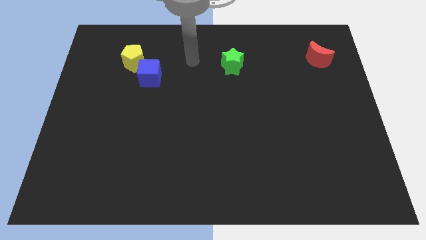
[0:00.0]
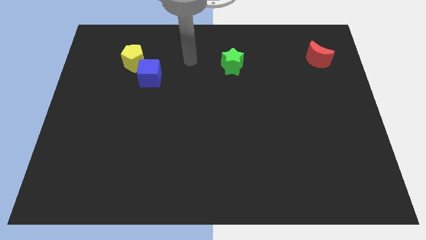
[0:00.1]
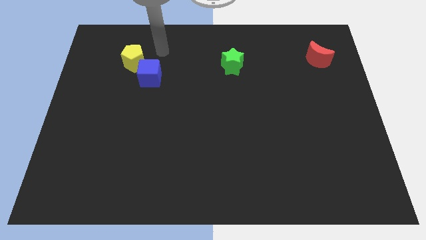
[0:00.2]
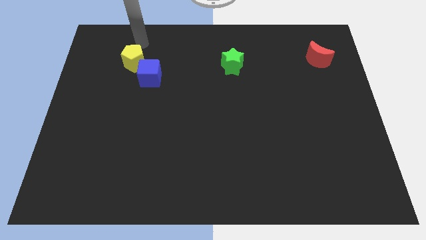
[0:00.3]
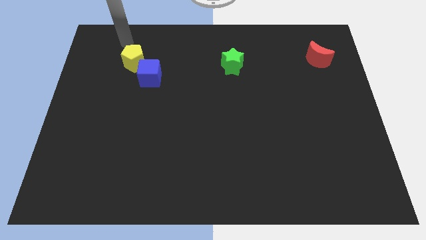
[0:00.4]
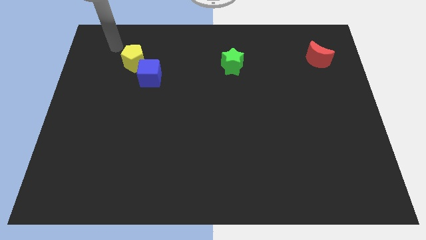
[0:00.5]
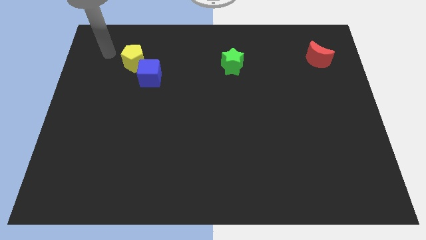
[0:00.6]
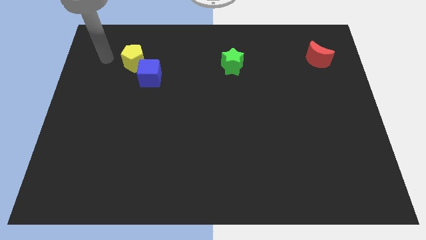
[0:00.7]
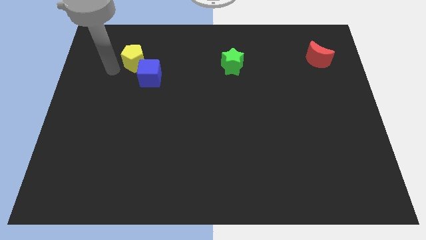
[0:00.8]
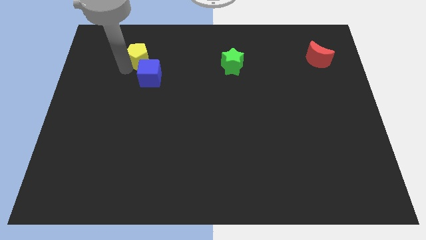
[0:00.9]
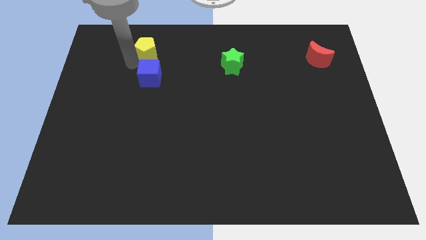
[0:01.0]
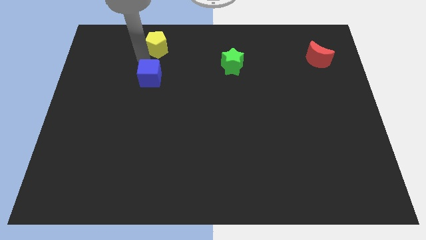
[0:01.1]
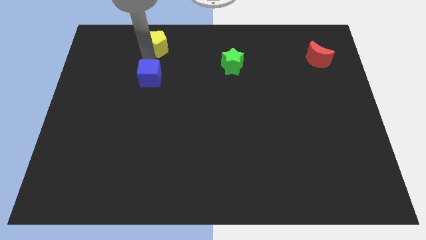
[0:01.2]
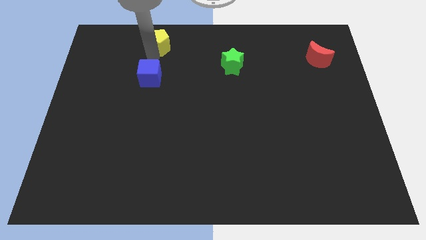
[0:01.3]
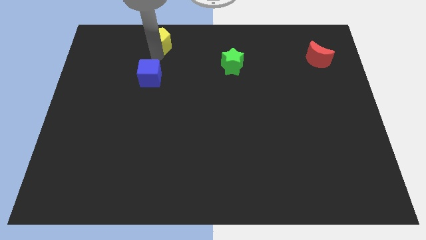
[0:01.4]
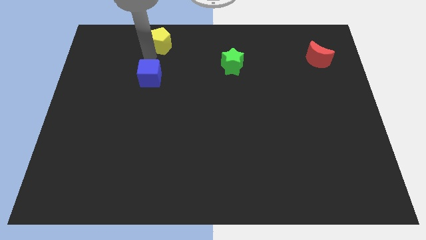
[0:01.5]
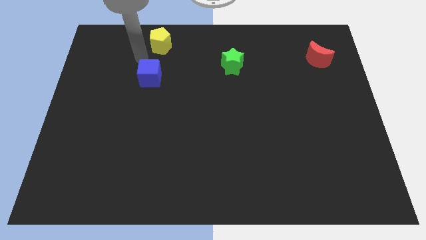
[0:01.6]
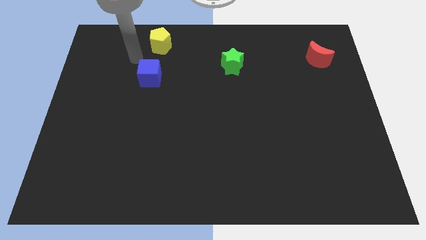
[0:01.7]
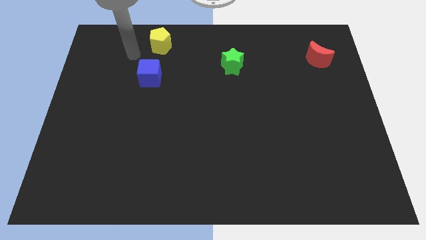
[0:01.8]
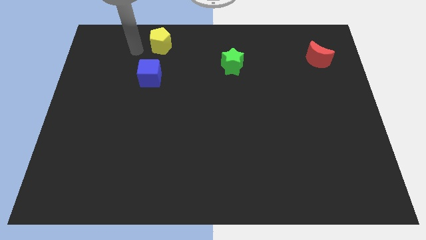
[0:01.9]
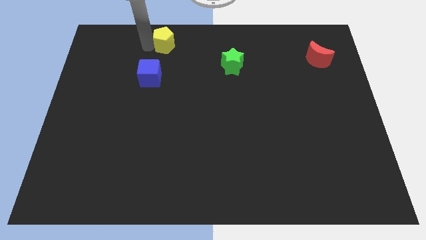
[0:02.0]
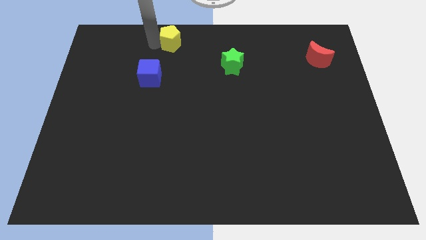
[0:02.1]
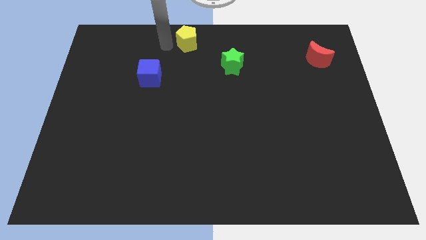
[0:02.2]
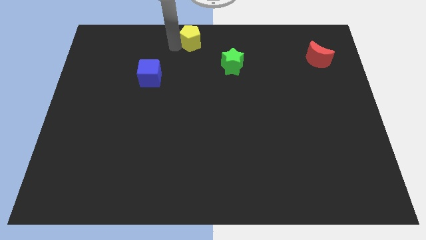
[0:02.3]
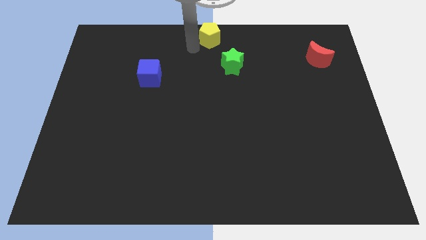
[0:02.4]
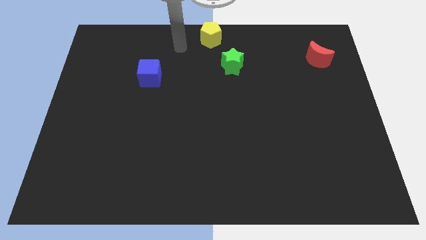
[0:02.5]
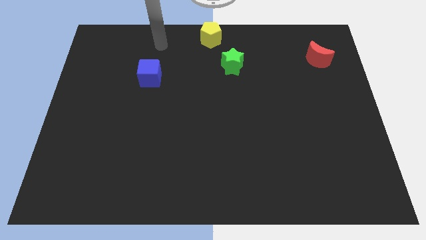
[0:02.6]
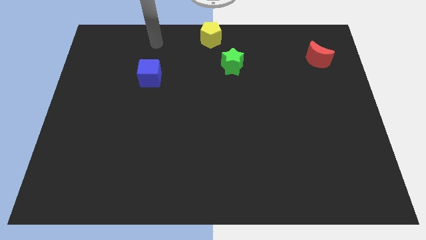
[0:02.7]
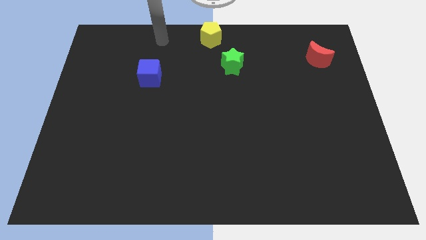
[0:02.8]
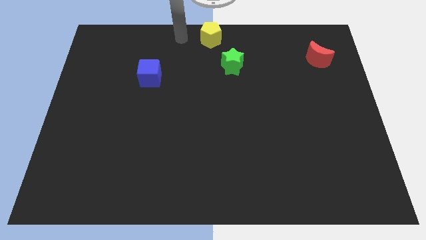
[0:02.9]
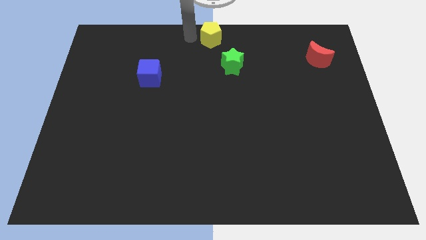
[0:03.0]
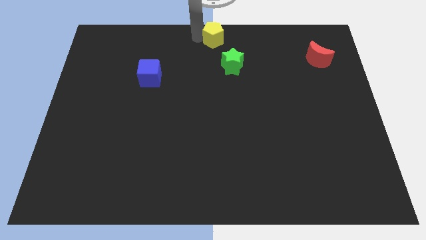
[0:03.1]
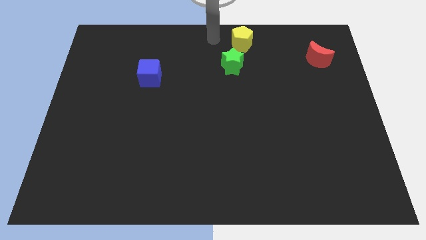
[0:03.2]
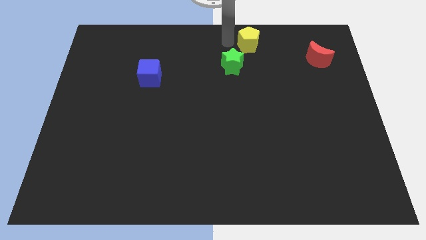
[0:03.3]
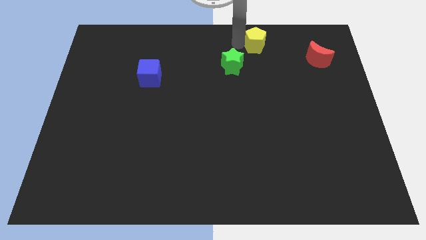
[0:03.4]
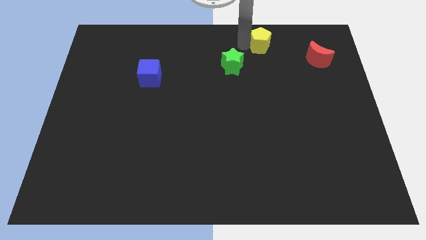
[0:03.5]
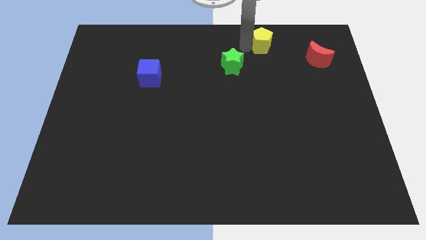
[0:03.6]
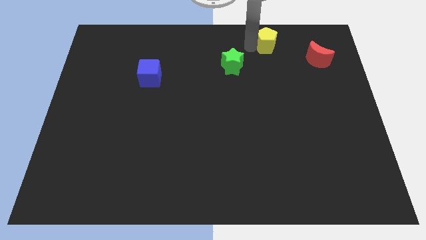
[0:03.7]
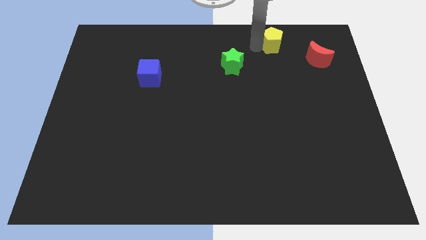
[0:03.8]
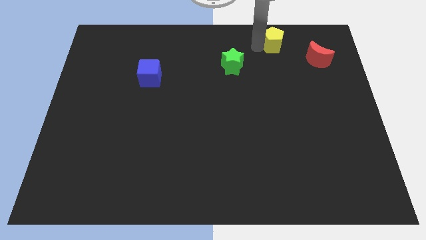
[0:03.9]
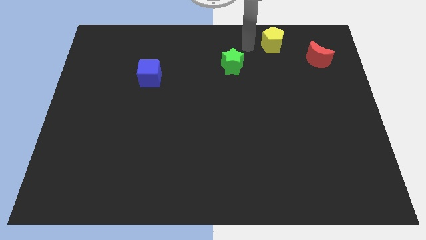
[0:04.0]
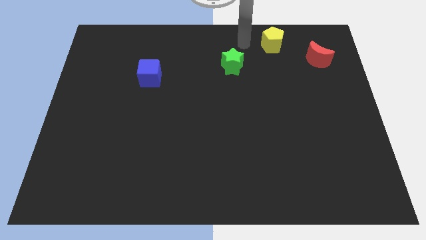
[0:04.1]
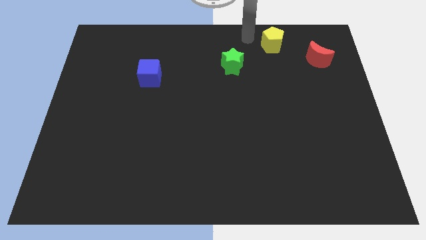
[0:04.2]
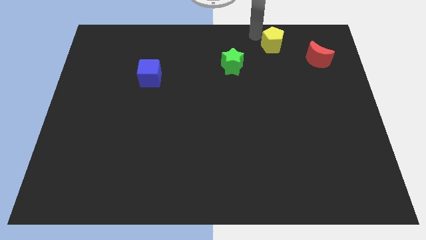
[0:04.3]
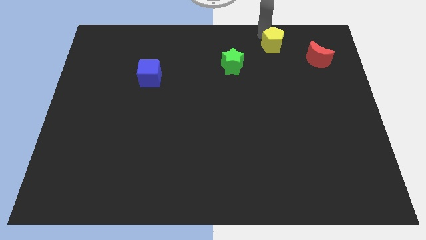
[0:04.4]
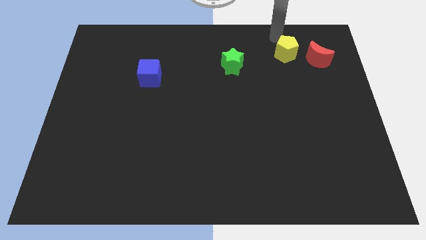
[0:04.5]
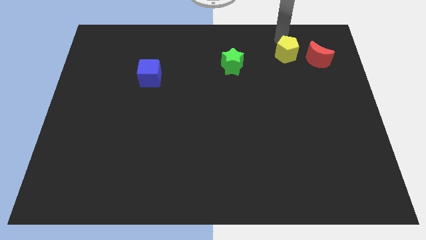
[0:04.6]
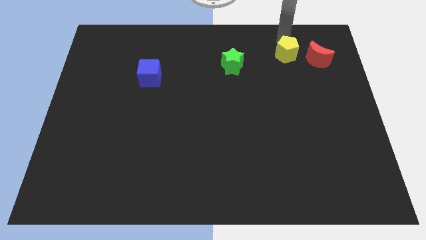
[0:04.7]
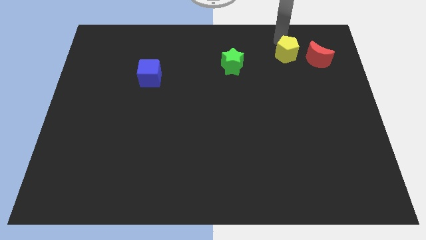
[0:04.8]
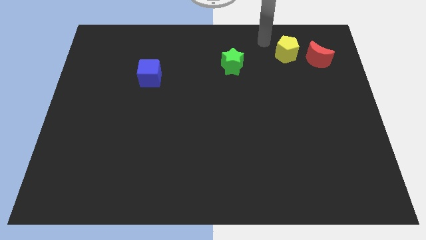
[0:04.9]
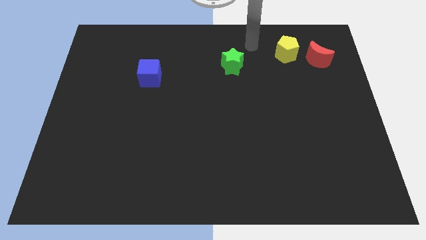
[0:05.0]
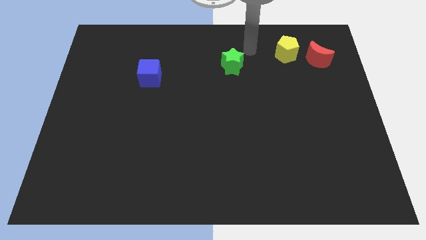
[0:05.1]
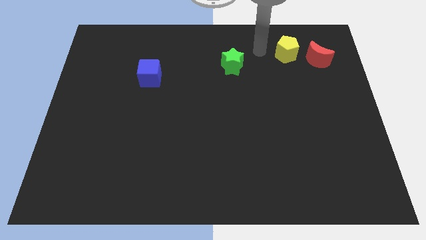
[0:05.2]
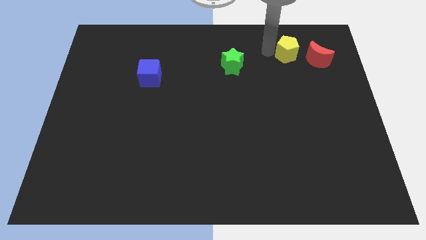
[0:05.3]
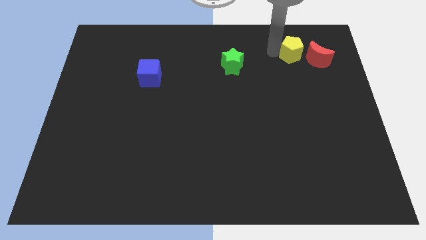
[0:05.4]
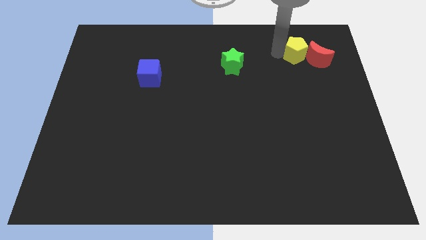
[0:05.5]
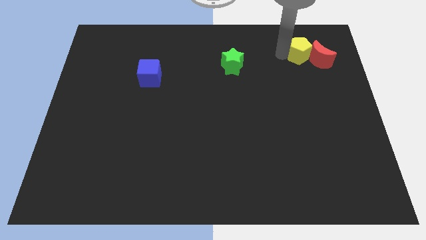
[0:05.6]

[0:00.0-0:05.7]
slide the yellow pentagon close to the red moon

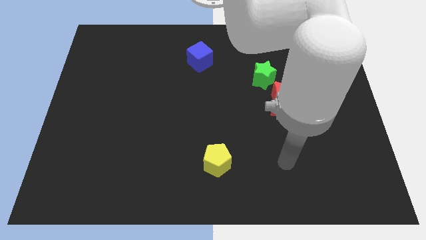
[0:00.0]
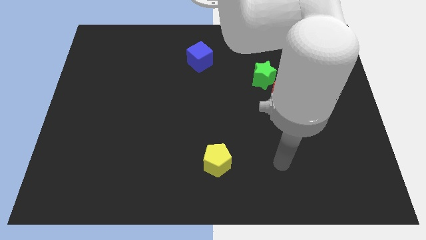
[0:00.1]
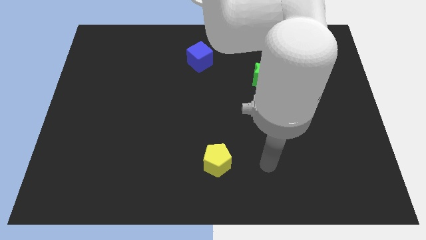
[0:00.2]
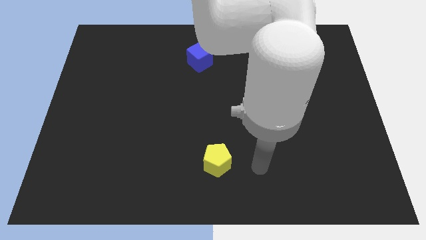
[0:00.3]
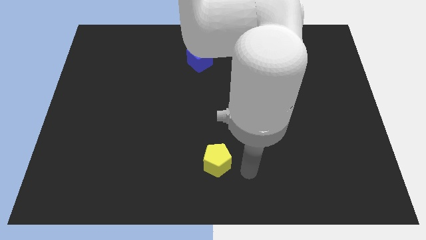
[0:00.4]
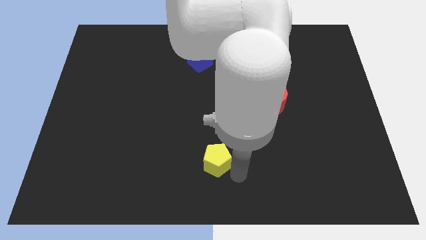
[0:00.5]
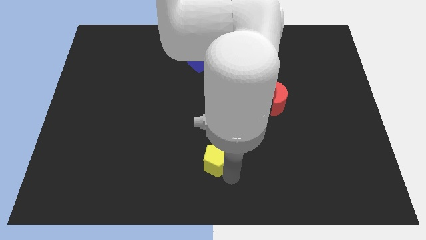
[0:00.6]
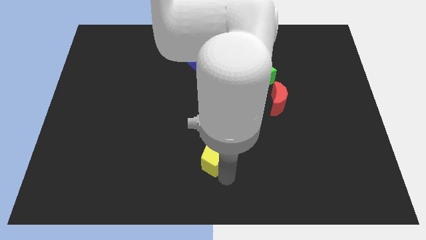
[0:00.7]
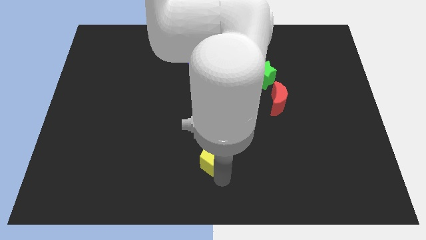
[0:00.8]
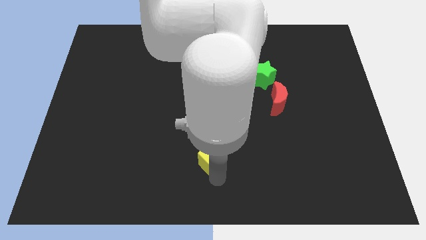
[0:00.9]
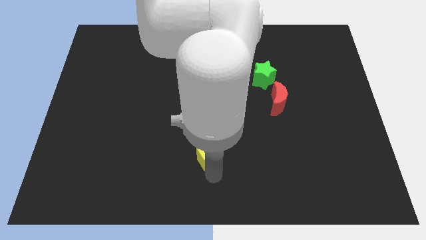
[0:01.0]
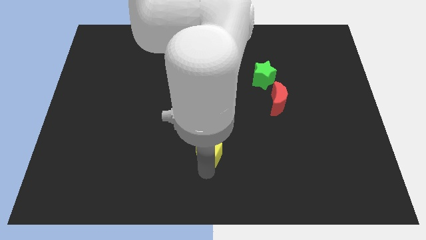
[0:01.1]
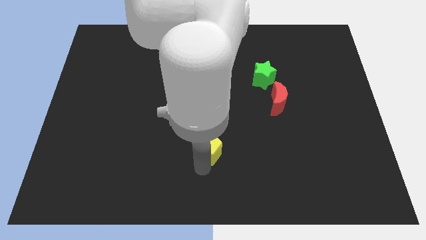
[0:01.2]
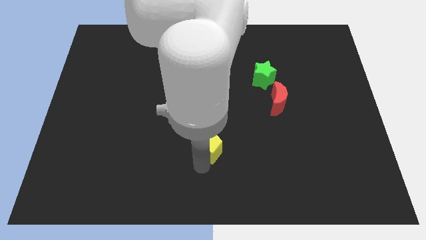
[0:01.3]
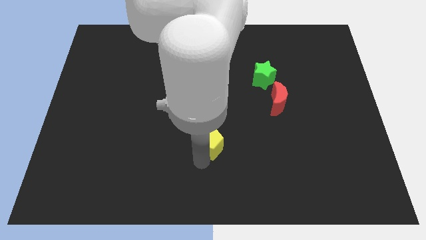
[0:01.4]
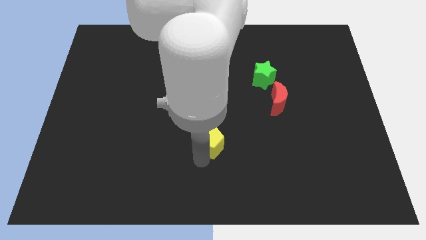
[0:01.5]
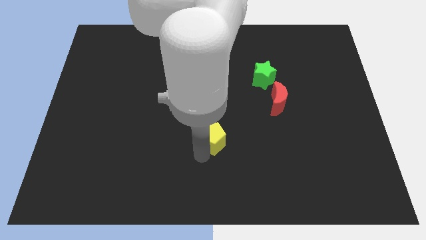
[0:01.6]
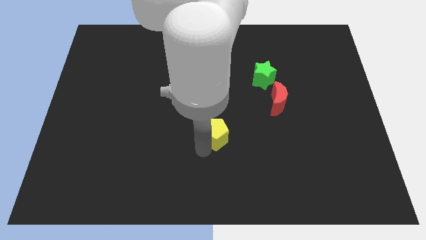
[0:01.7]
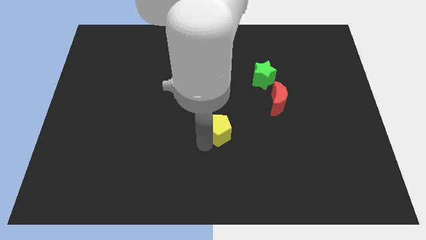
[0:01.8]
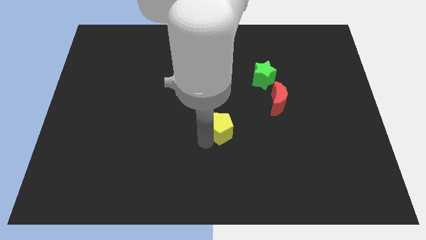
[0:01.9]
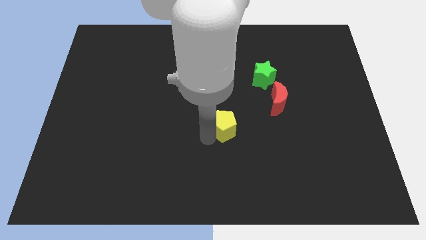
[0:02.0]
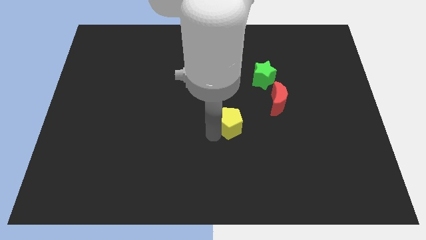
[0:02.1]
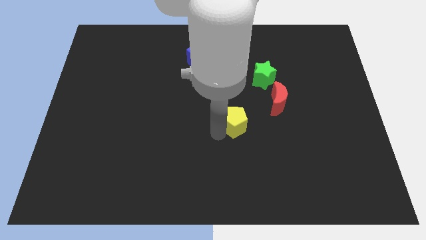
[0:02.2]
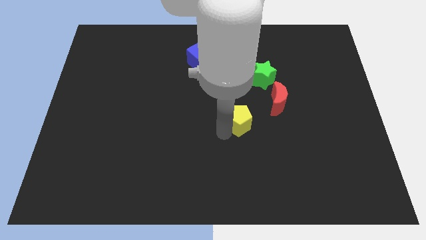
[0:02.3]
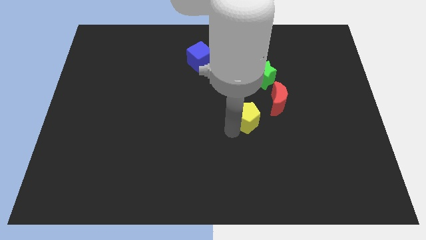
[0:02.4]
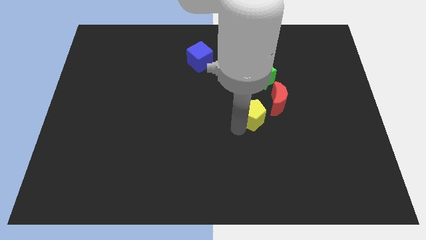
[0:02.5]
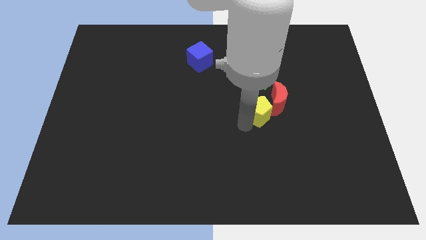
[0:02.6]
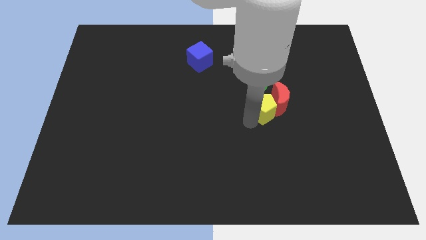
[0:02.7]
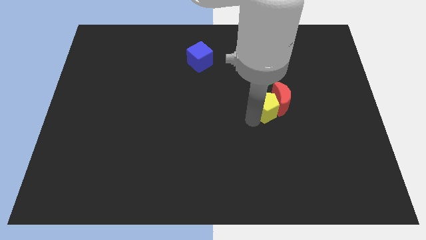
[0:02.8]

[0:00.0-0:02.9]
push the pentagon next to the red block

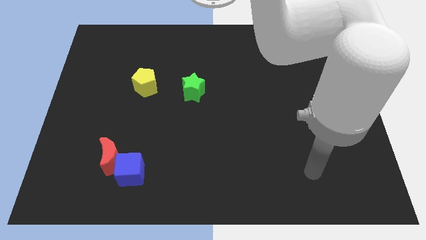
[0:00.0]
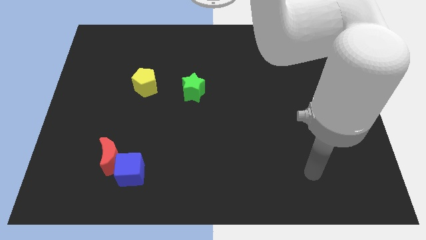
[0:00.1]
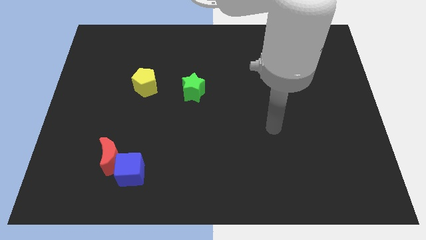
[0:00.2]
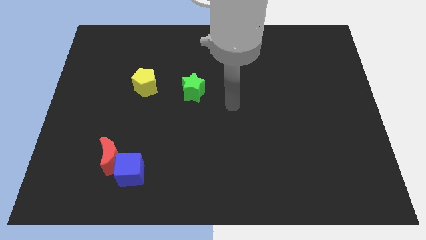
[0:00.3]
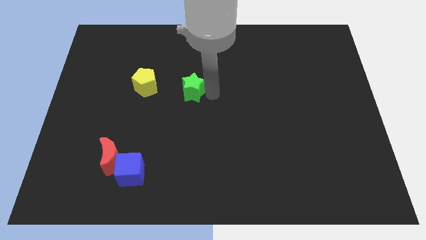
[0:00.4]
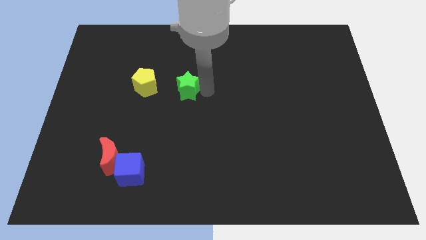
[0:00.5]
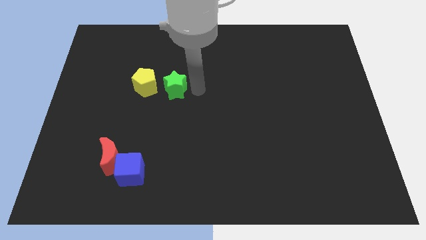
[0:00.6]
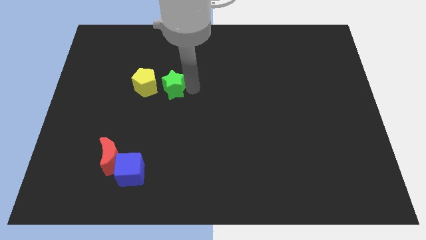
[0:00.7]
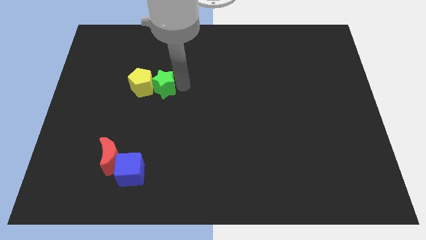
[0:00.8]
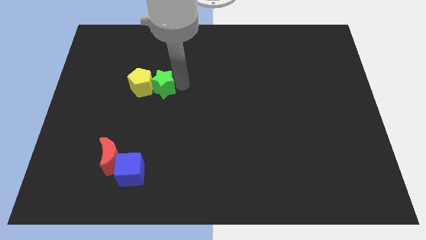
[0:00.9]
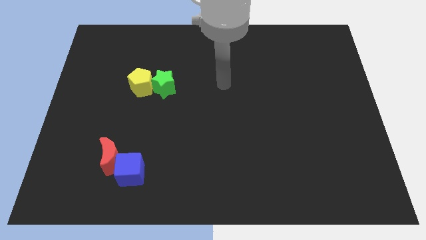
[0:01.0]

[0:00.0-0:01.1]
slide the green block towards the yellow block
